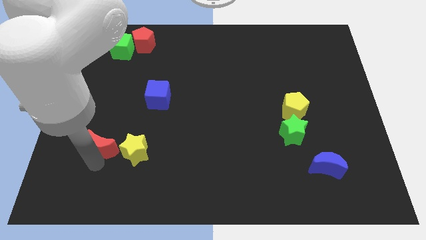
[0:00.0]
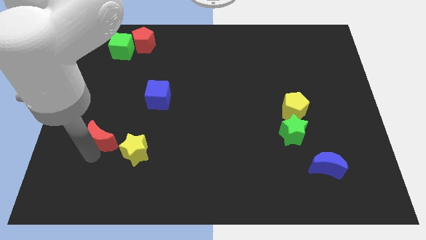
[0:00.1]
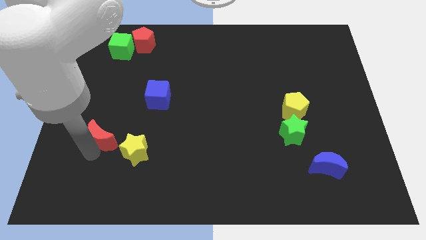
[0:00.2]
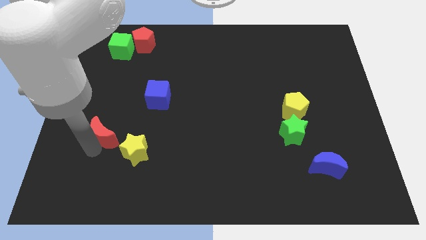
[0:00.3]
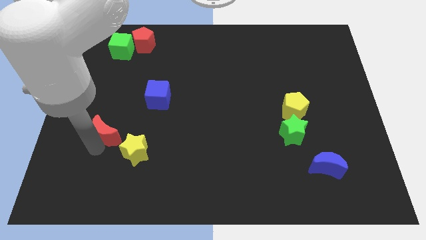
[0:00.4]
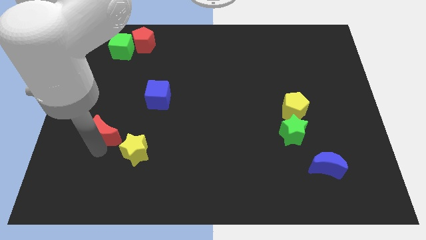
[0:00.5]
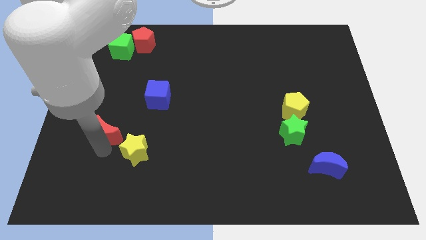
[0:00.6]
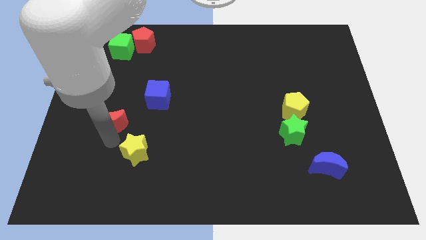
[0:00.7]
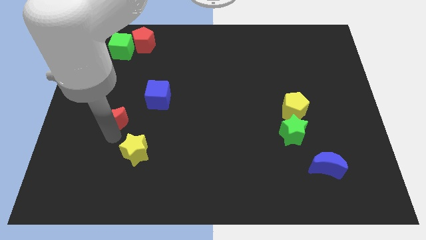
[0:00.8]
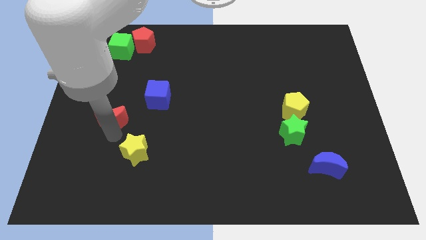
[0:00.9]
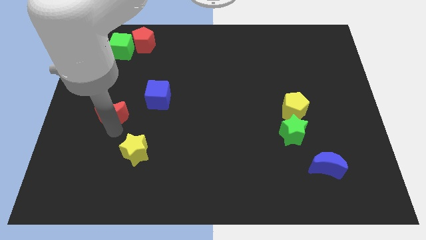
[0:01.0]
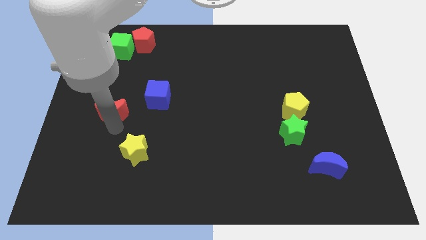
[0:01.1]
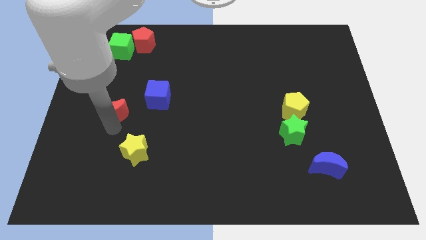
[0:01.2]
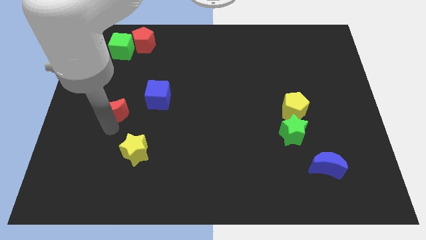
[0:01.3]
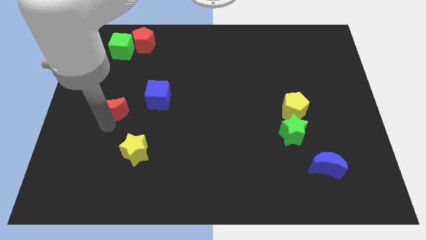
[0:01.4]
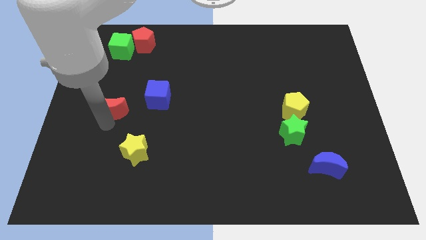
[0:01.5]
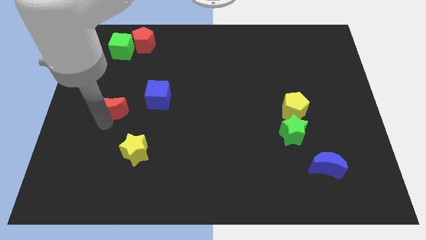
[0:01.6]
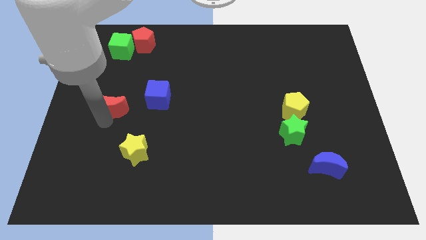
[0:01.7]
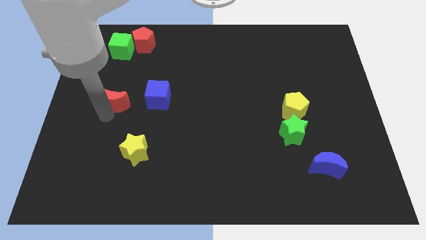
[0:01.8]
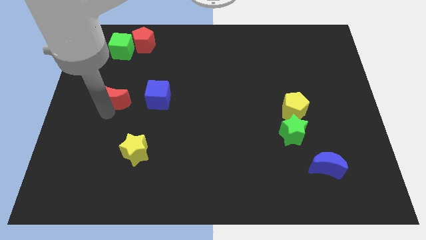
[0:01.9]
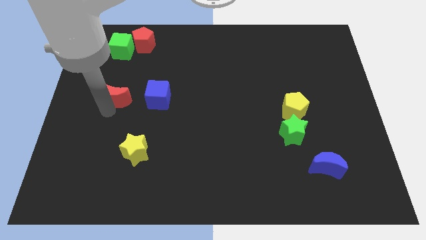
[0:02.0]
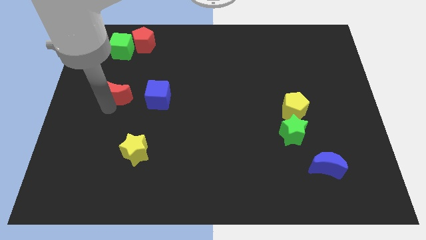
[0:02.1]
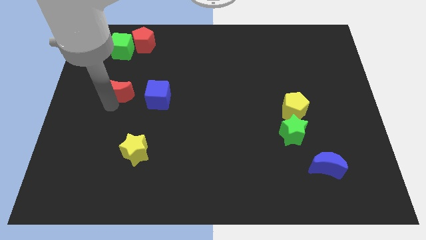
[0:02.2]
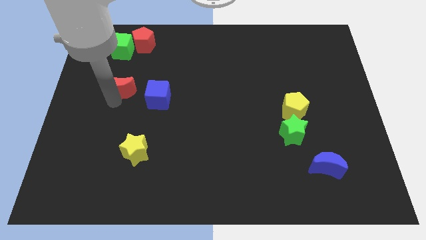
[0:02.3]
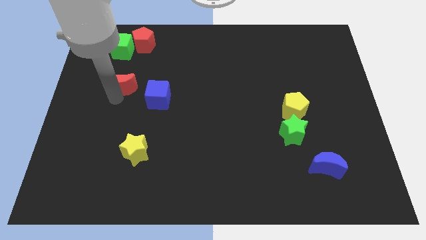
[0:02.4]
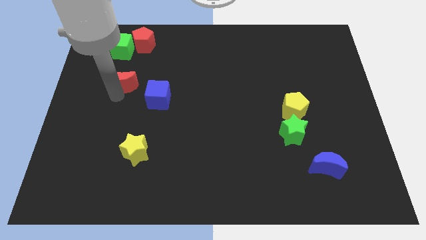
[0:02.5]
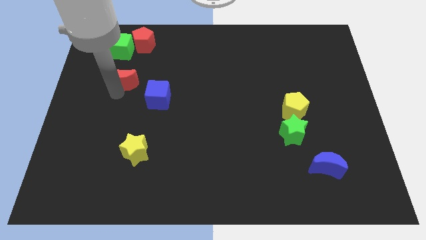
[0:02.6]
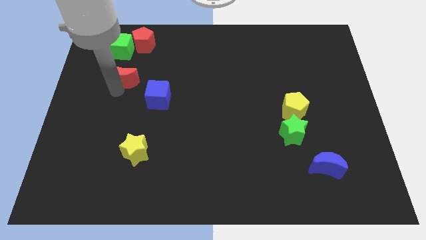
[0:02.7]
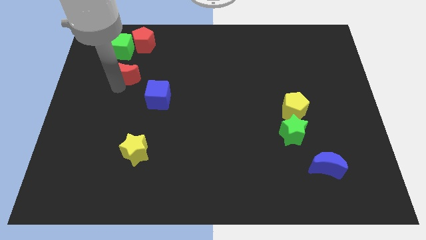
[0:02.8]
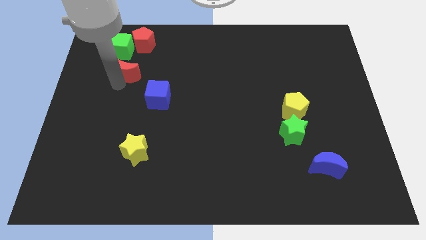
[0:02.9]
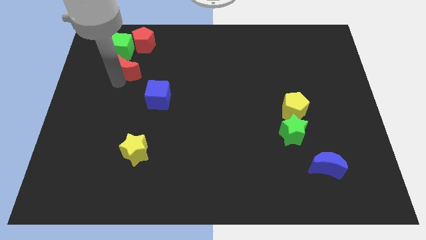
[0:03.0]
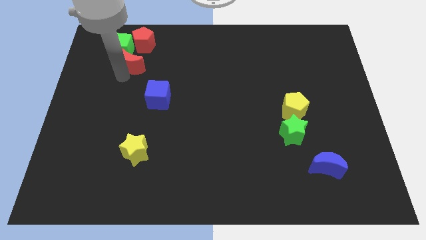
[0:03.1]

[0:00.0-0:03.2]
push the red moon towards the green cube

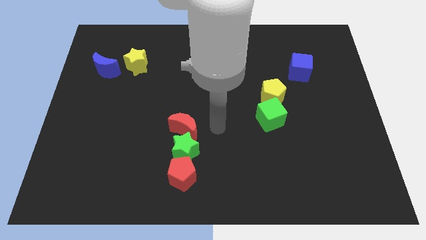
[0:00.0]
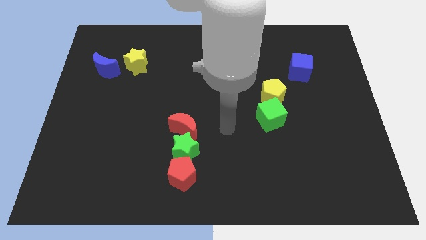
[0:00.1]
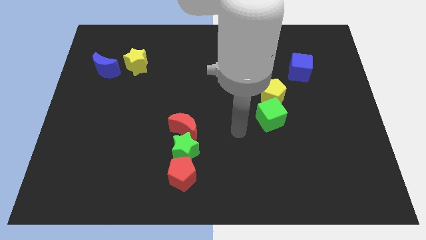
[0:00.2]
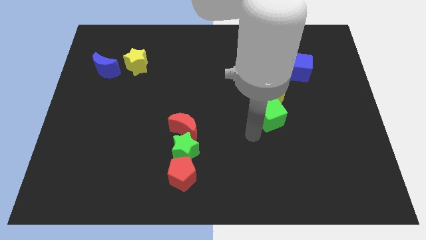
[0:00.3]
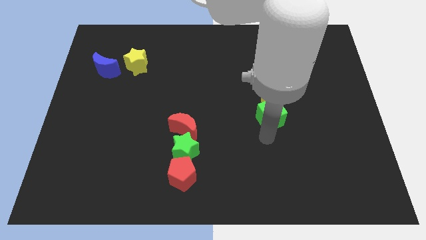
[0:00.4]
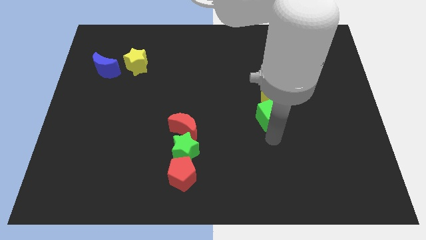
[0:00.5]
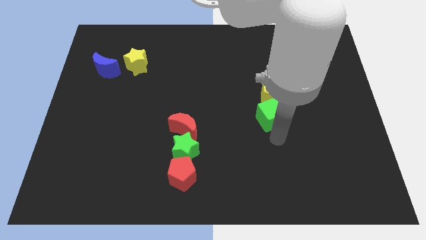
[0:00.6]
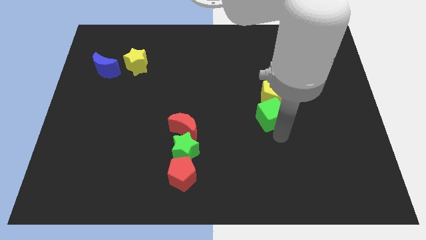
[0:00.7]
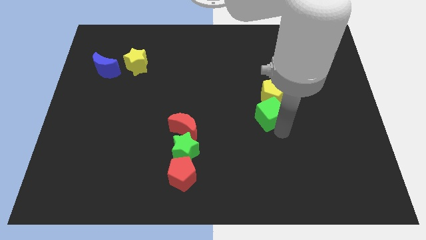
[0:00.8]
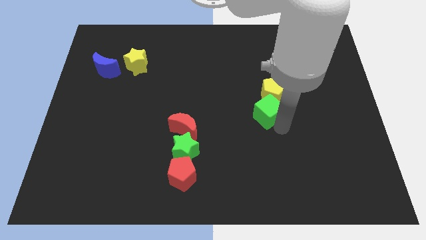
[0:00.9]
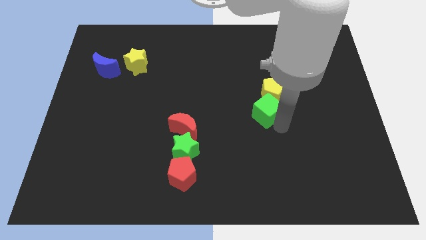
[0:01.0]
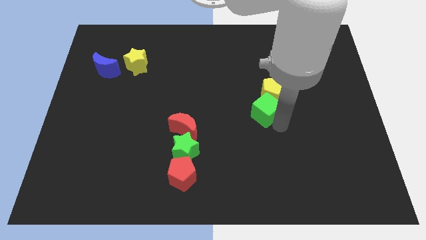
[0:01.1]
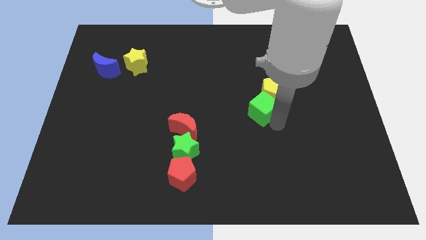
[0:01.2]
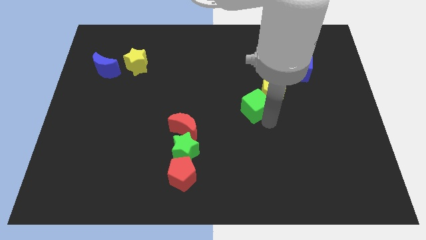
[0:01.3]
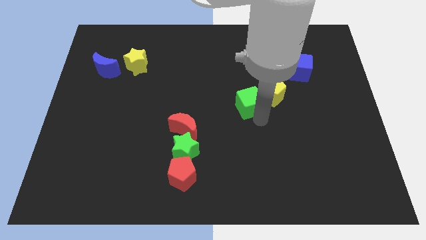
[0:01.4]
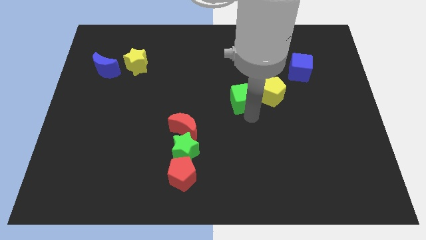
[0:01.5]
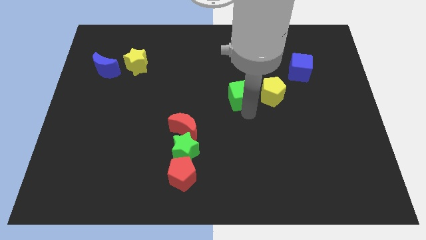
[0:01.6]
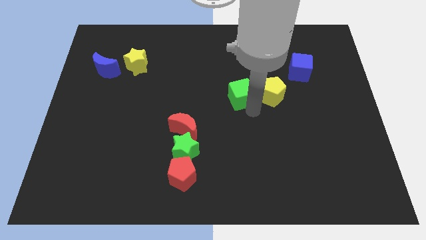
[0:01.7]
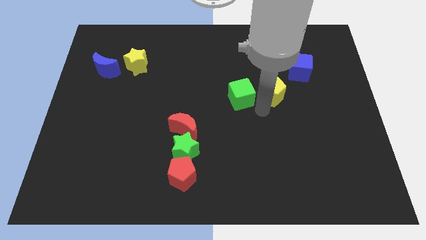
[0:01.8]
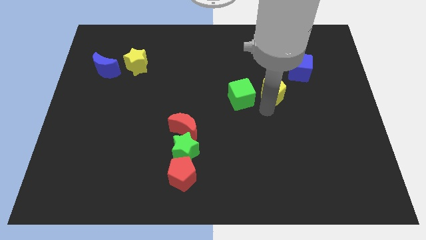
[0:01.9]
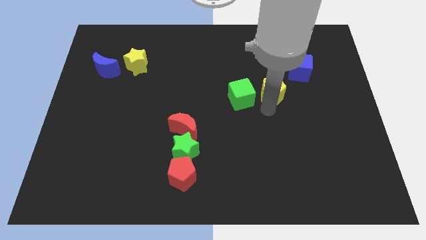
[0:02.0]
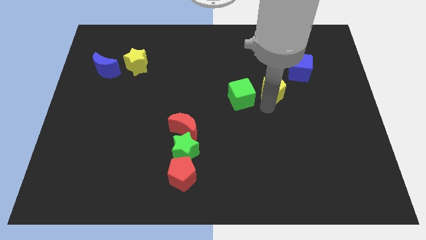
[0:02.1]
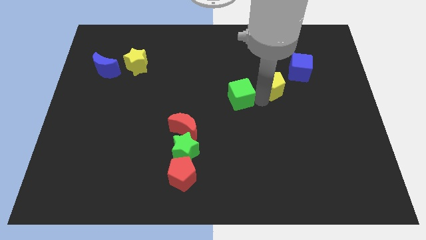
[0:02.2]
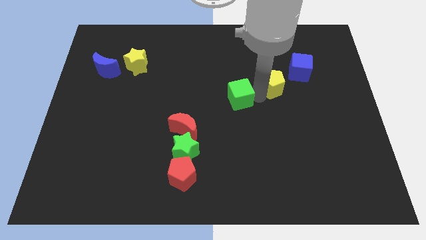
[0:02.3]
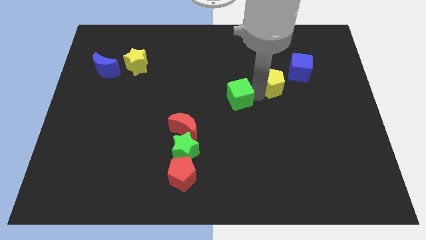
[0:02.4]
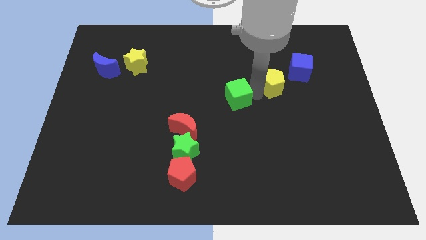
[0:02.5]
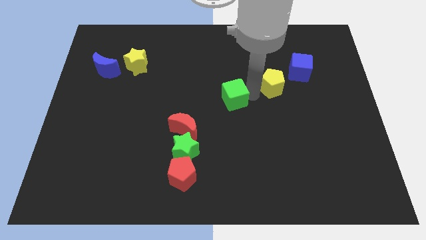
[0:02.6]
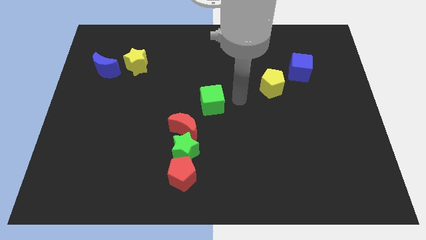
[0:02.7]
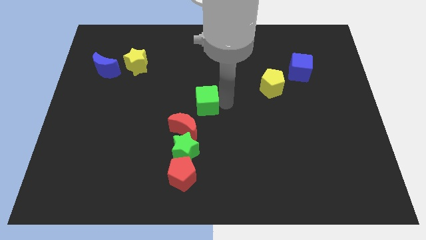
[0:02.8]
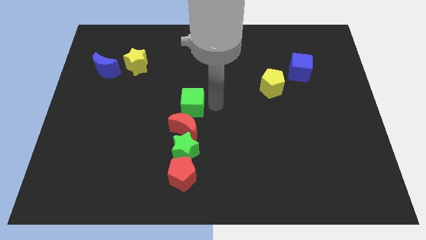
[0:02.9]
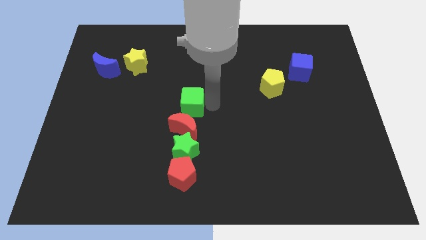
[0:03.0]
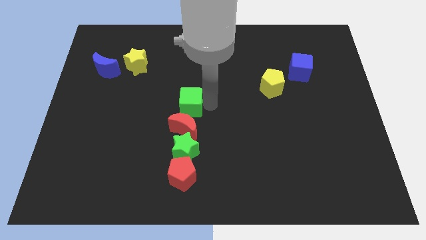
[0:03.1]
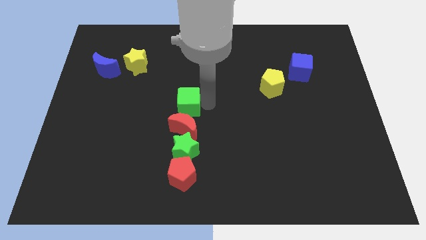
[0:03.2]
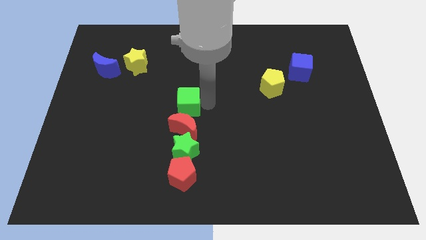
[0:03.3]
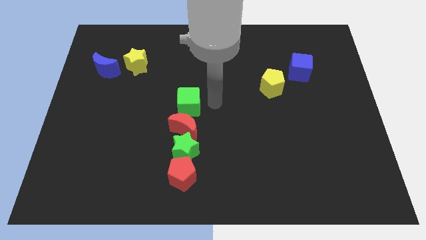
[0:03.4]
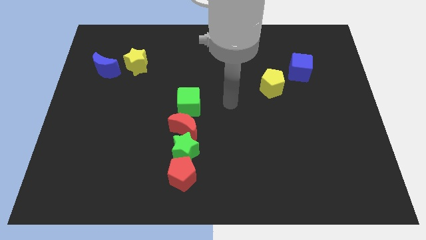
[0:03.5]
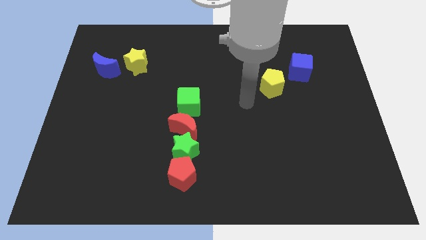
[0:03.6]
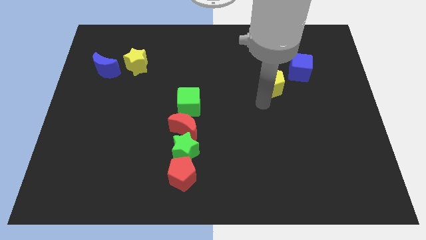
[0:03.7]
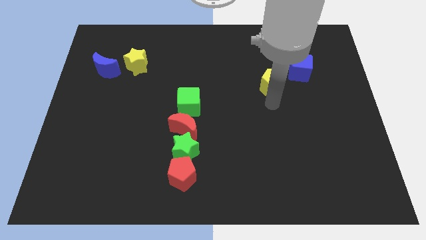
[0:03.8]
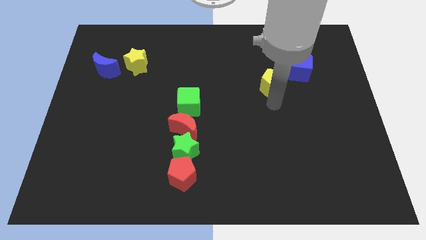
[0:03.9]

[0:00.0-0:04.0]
place green cube on top of red crescent

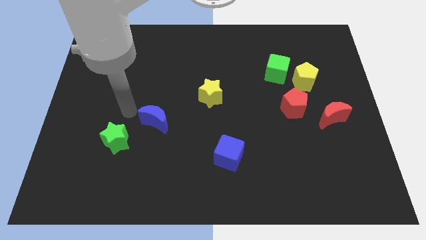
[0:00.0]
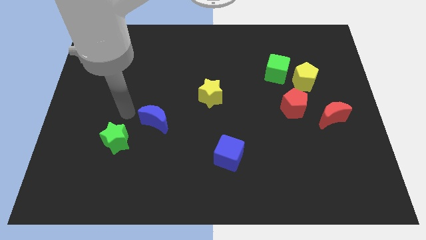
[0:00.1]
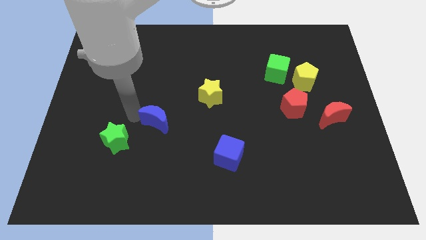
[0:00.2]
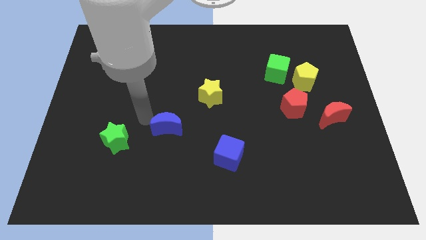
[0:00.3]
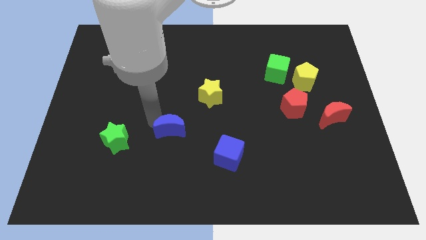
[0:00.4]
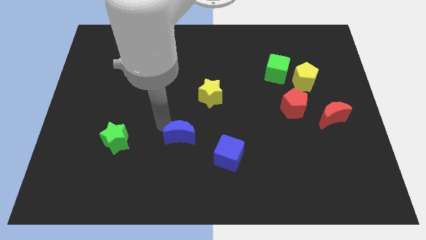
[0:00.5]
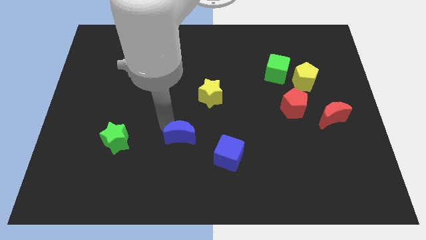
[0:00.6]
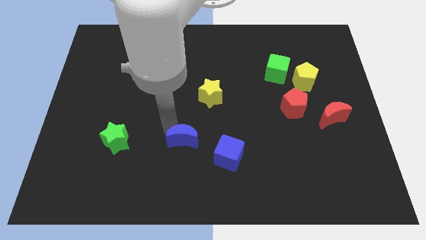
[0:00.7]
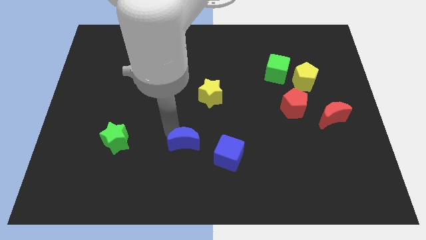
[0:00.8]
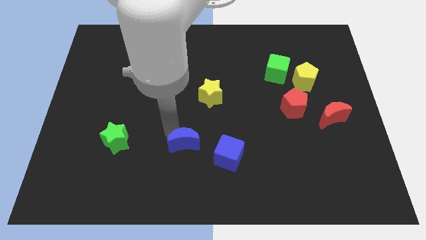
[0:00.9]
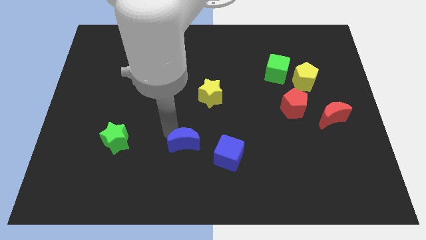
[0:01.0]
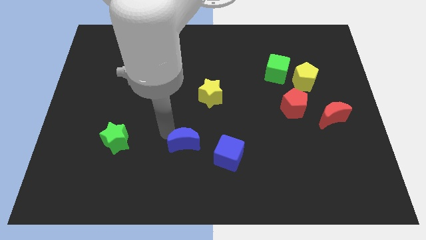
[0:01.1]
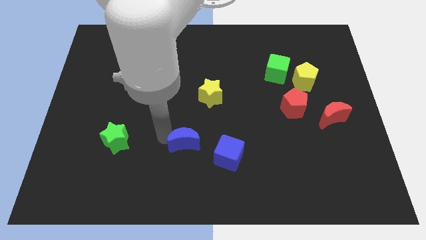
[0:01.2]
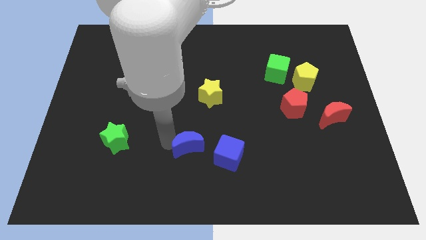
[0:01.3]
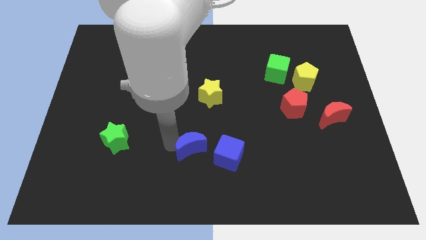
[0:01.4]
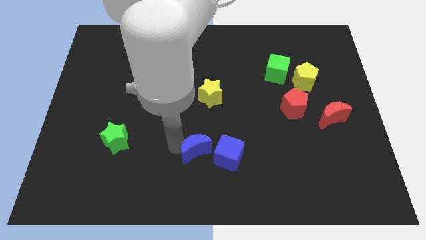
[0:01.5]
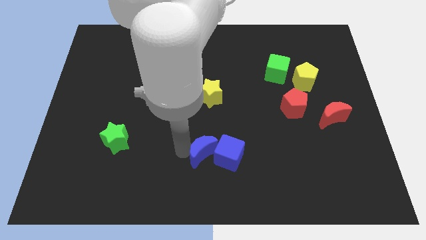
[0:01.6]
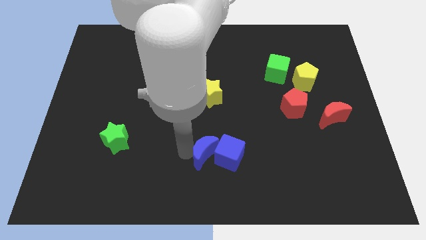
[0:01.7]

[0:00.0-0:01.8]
push the blue moon towards the blue cube
